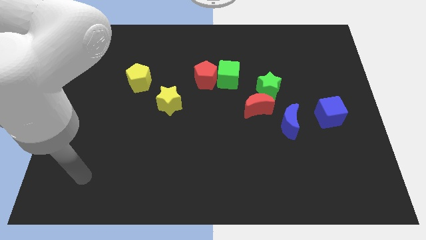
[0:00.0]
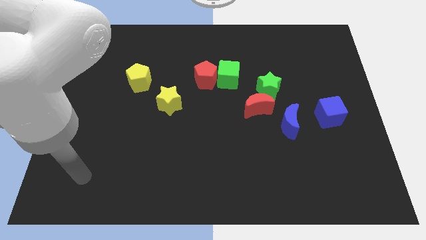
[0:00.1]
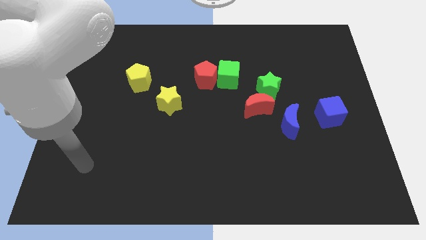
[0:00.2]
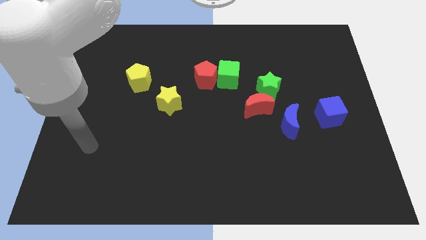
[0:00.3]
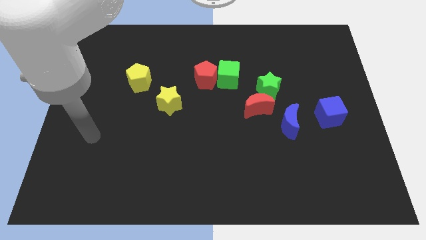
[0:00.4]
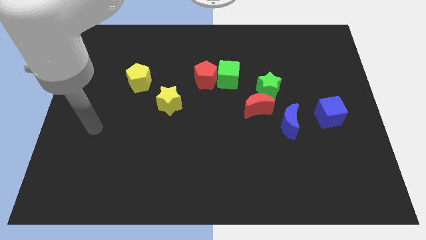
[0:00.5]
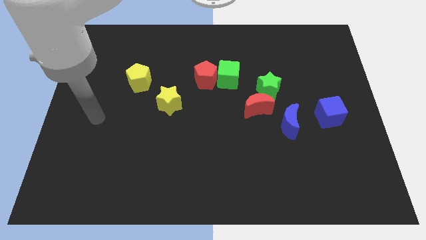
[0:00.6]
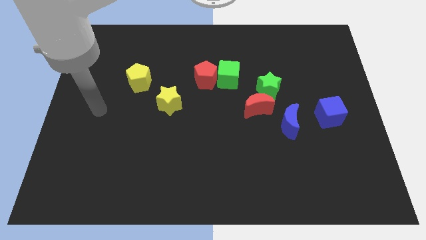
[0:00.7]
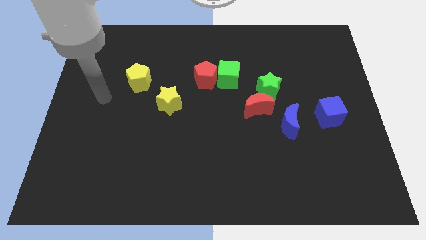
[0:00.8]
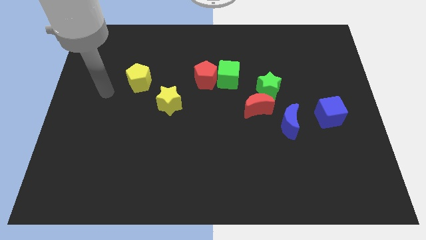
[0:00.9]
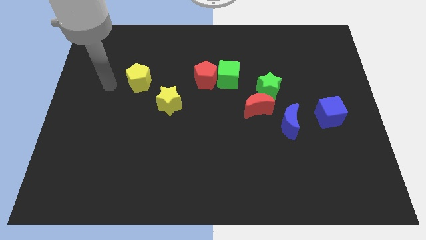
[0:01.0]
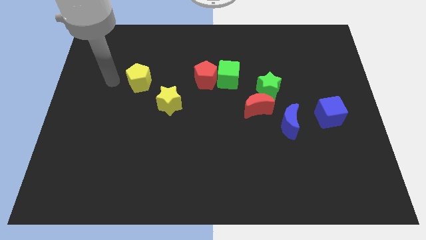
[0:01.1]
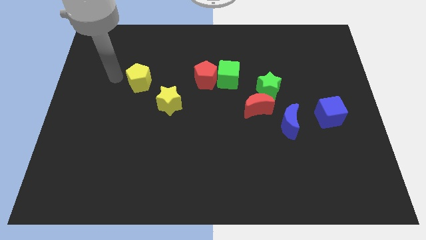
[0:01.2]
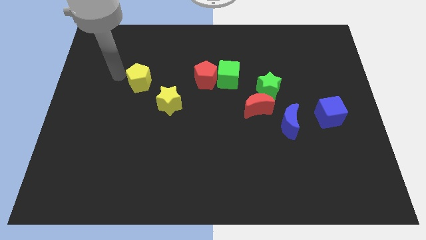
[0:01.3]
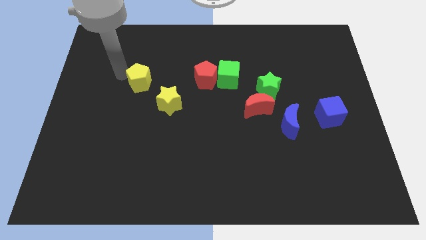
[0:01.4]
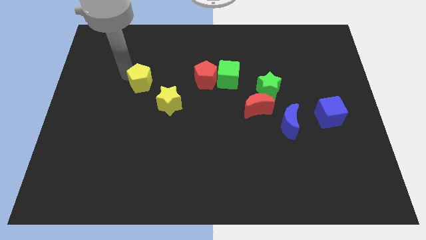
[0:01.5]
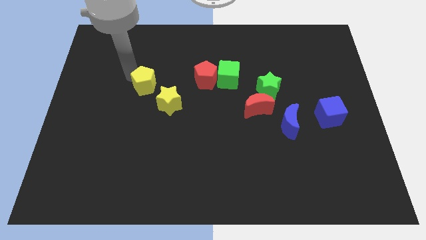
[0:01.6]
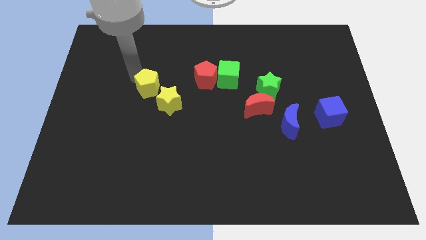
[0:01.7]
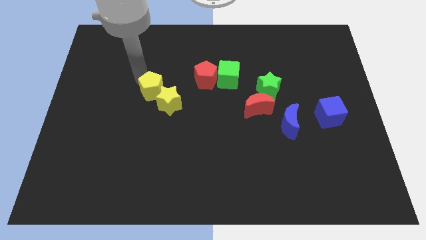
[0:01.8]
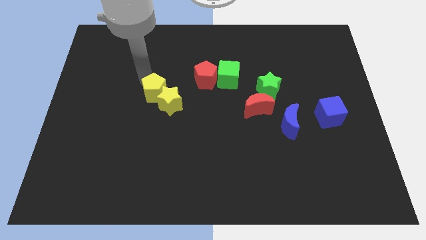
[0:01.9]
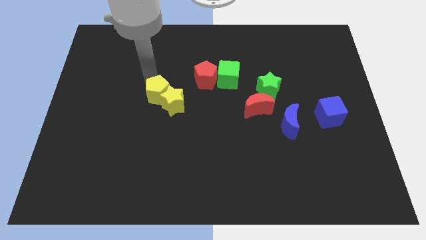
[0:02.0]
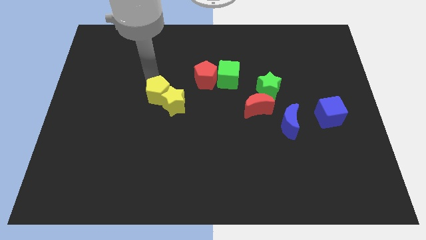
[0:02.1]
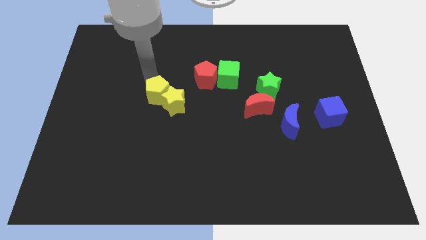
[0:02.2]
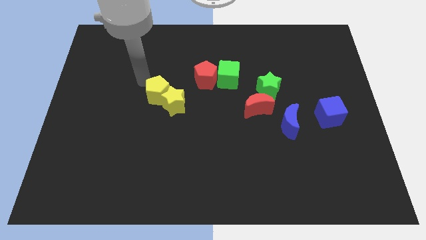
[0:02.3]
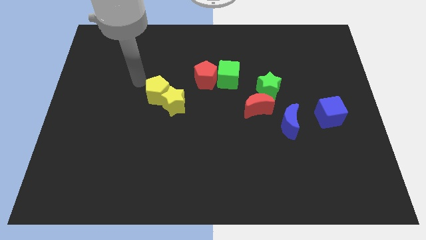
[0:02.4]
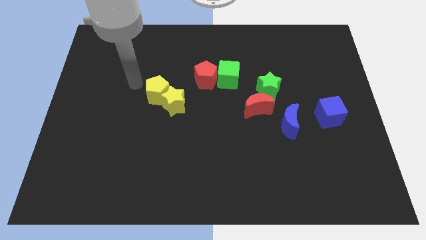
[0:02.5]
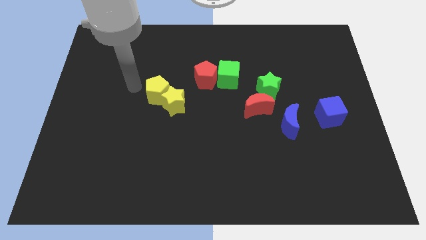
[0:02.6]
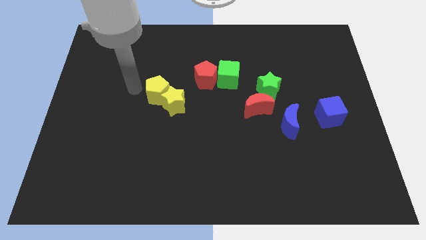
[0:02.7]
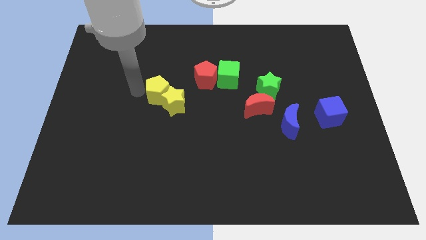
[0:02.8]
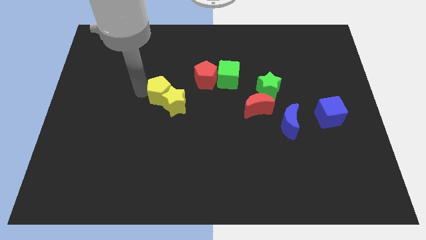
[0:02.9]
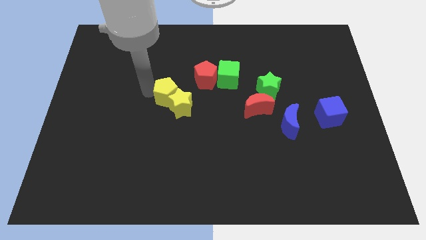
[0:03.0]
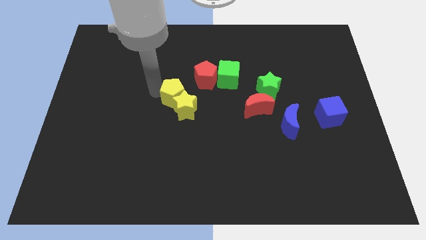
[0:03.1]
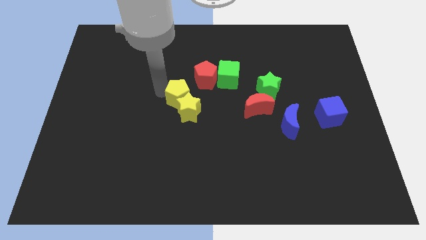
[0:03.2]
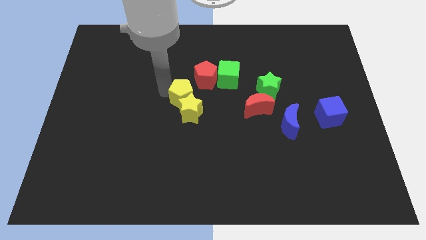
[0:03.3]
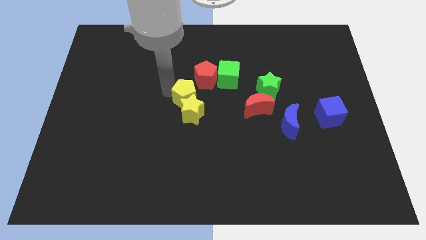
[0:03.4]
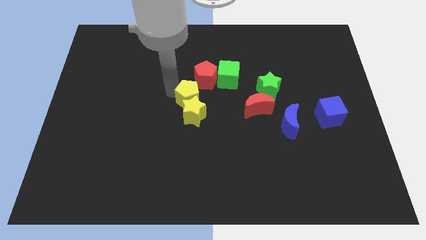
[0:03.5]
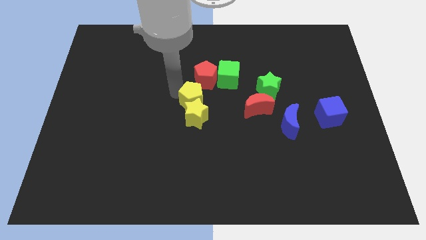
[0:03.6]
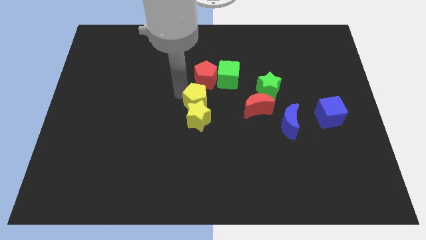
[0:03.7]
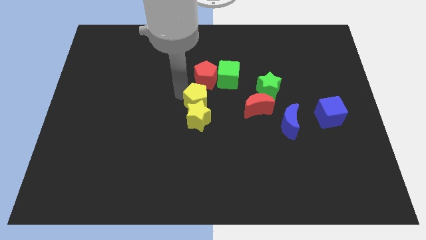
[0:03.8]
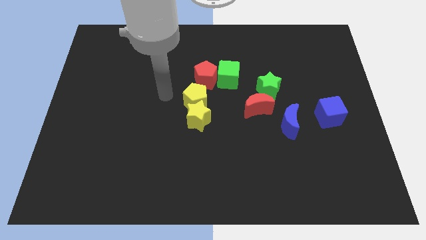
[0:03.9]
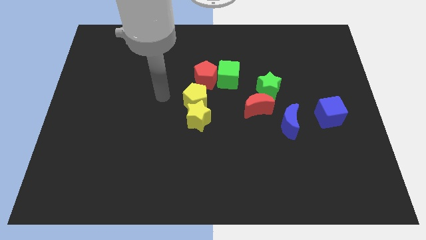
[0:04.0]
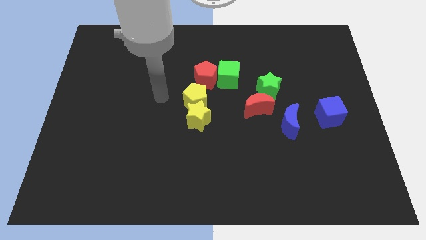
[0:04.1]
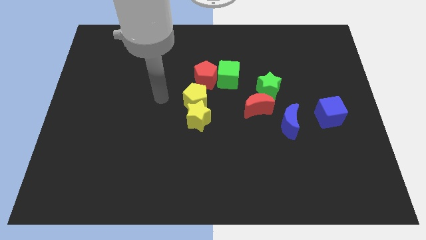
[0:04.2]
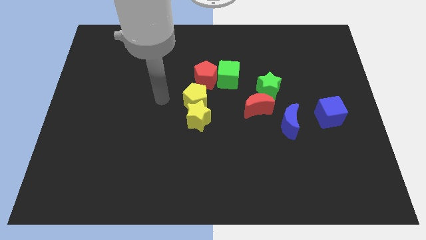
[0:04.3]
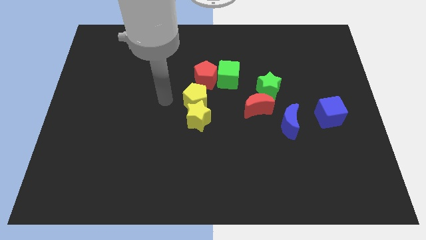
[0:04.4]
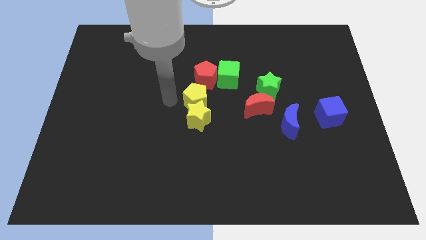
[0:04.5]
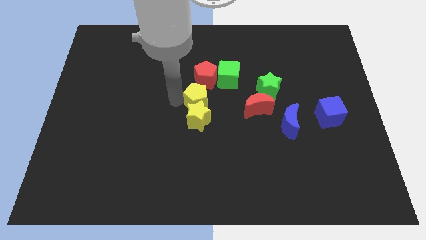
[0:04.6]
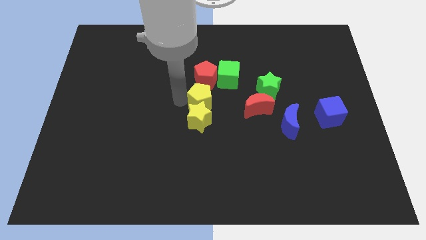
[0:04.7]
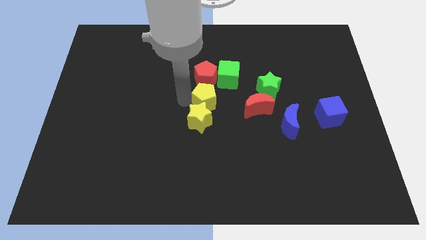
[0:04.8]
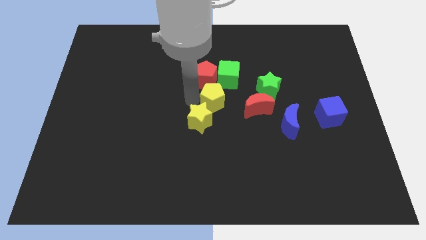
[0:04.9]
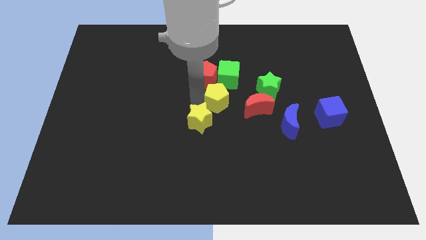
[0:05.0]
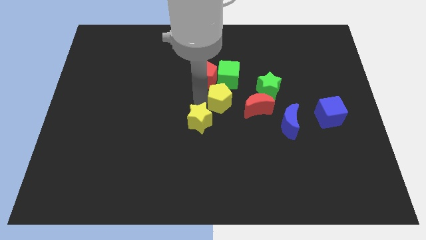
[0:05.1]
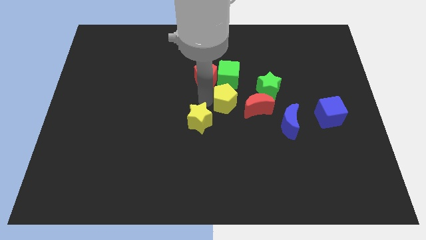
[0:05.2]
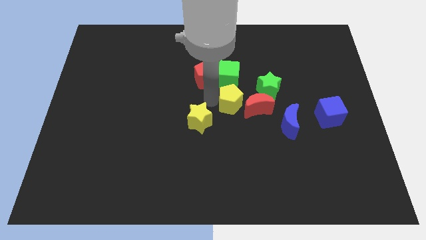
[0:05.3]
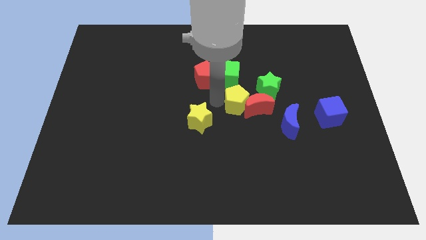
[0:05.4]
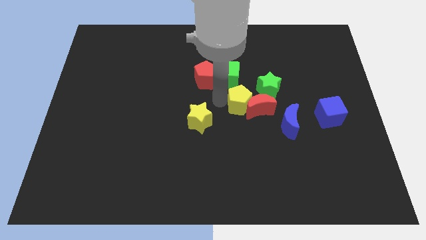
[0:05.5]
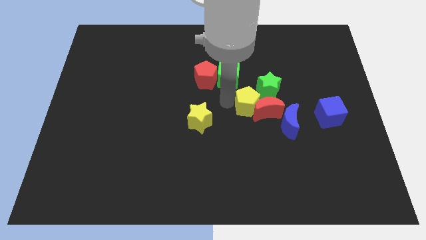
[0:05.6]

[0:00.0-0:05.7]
move the yellow pentagon to the red moon

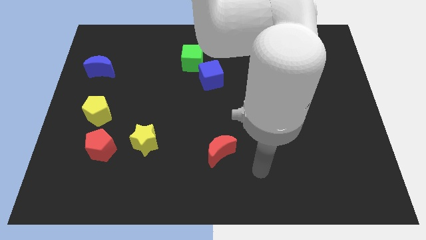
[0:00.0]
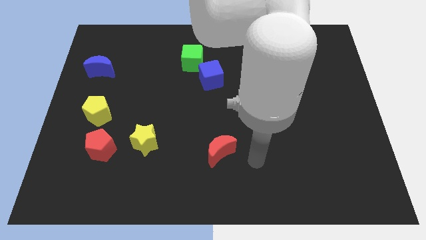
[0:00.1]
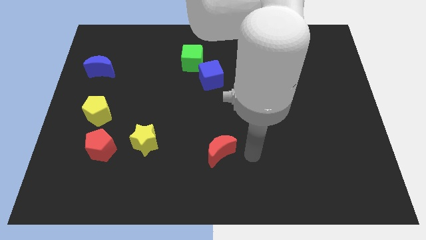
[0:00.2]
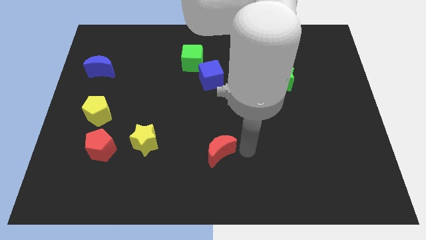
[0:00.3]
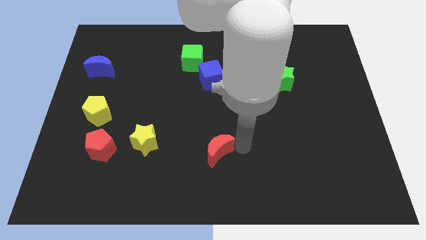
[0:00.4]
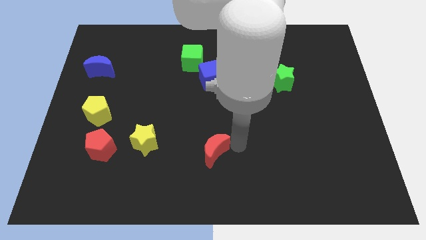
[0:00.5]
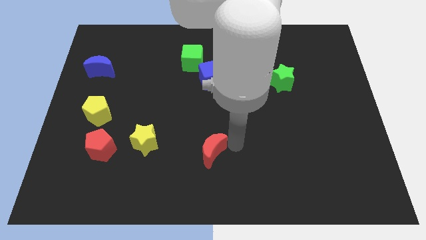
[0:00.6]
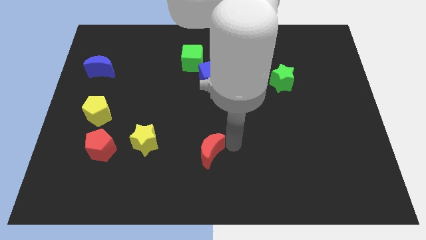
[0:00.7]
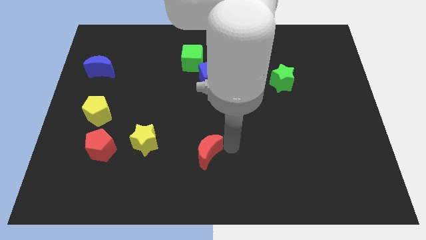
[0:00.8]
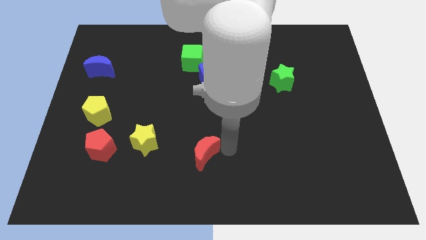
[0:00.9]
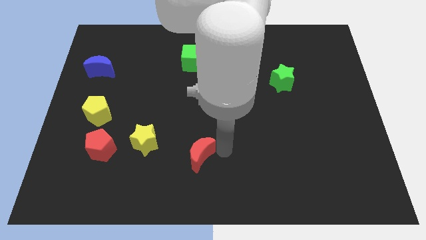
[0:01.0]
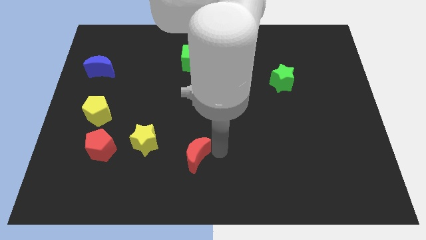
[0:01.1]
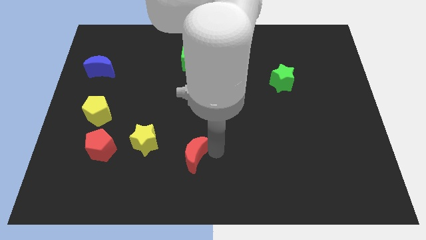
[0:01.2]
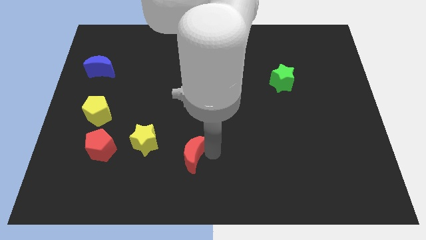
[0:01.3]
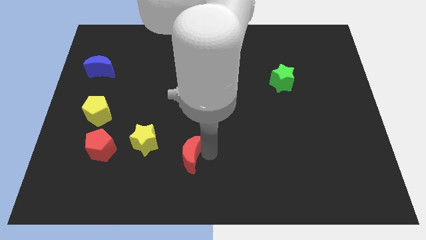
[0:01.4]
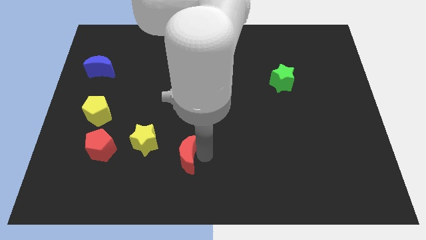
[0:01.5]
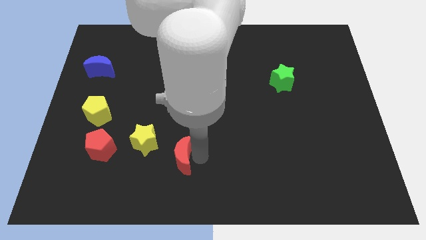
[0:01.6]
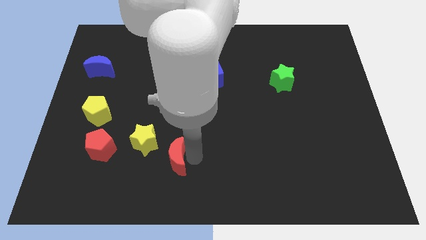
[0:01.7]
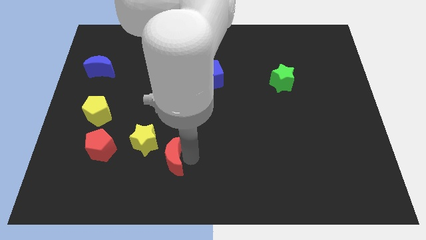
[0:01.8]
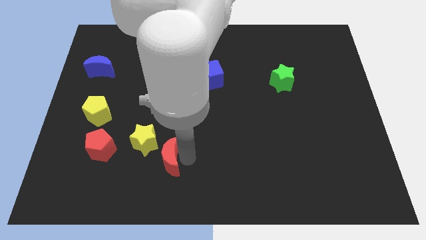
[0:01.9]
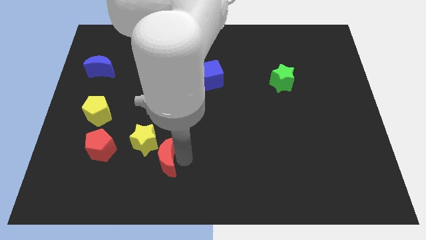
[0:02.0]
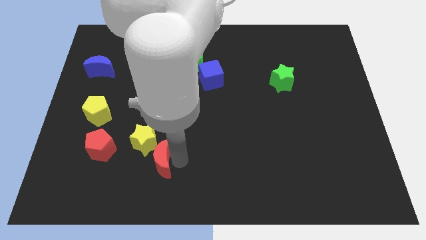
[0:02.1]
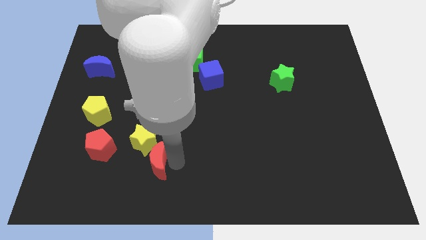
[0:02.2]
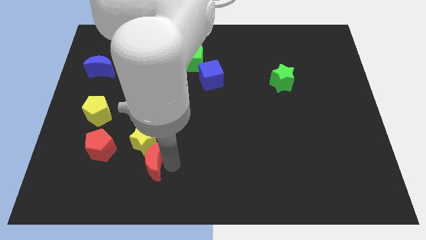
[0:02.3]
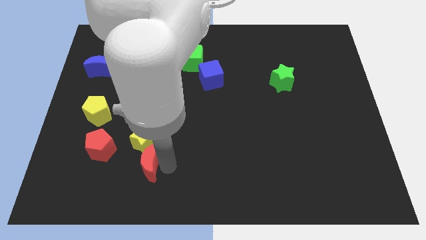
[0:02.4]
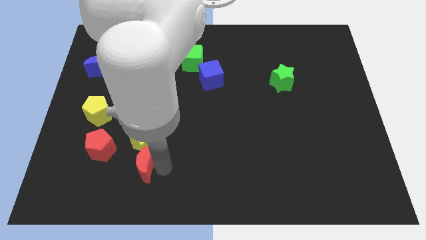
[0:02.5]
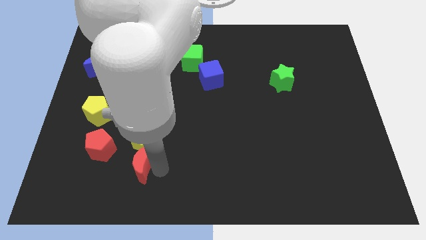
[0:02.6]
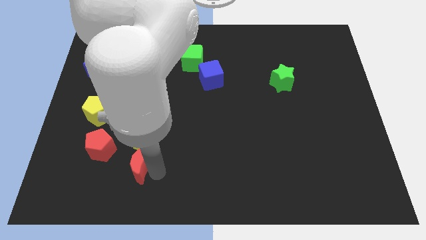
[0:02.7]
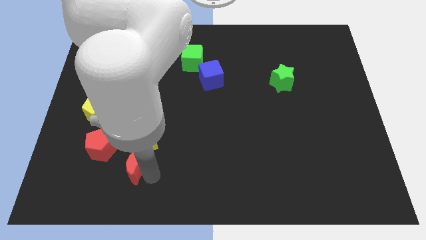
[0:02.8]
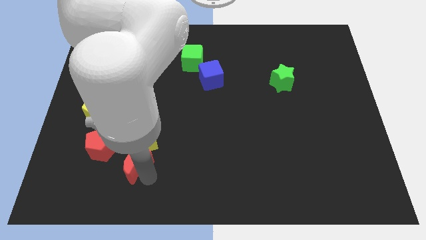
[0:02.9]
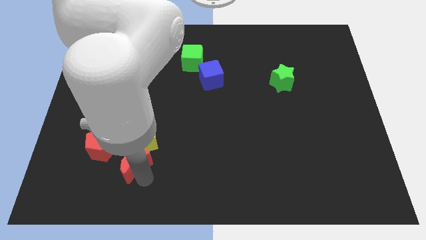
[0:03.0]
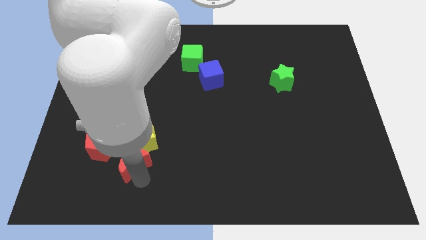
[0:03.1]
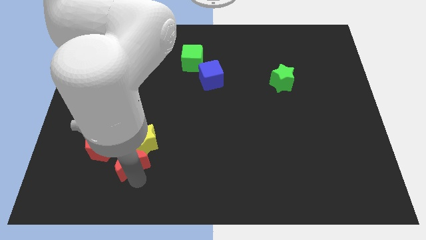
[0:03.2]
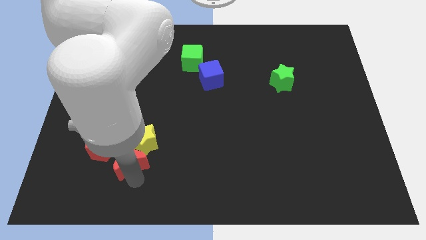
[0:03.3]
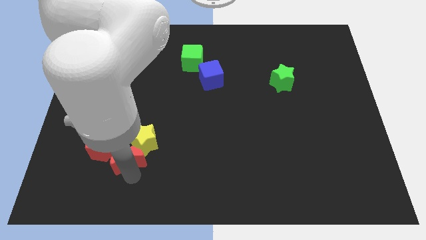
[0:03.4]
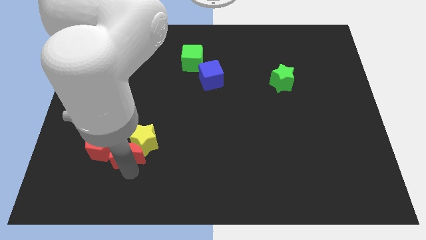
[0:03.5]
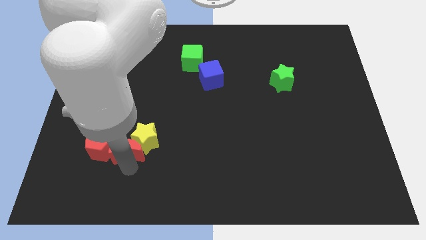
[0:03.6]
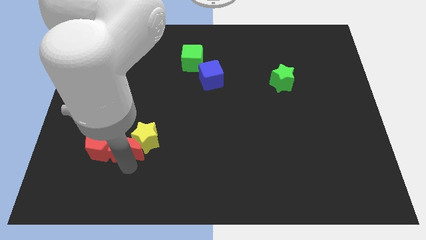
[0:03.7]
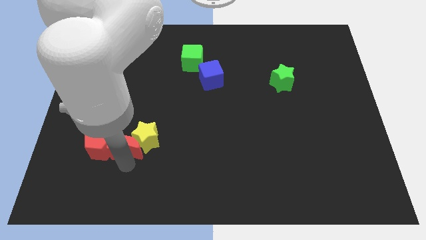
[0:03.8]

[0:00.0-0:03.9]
move the red moon to the red pentagon
